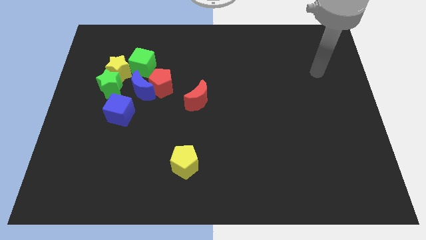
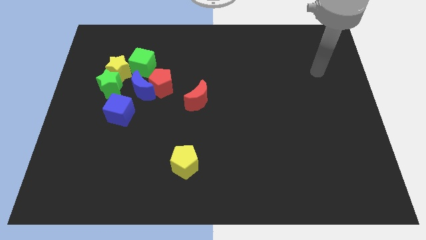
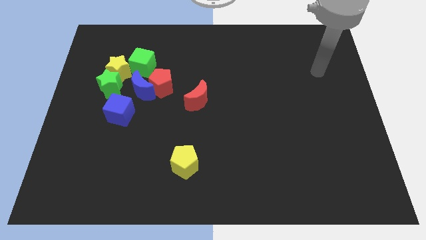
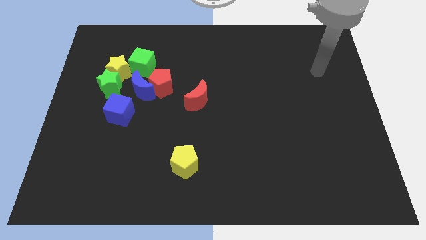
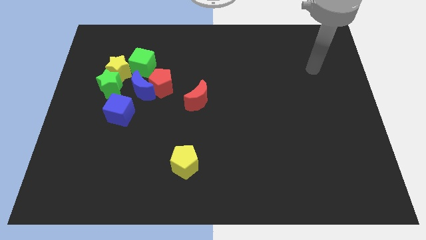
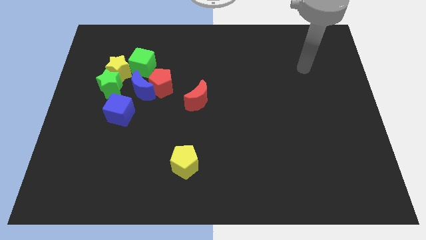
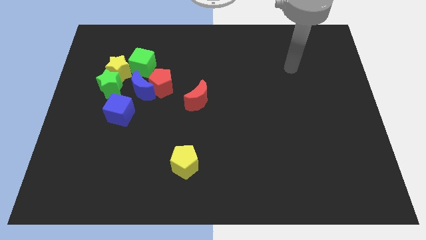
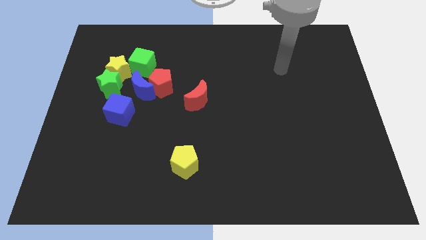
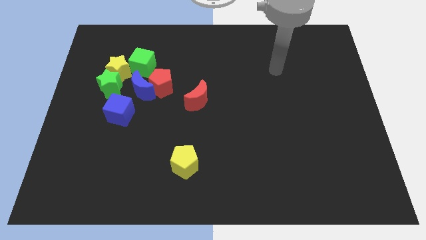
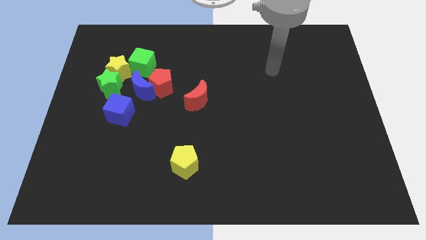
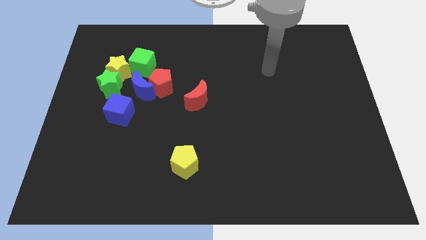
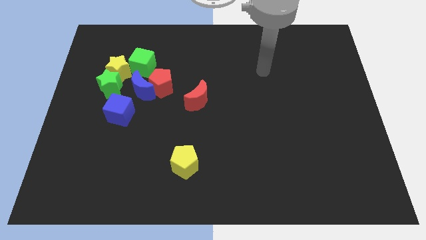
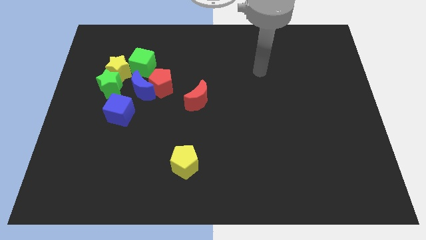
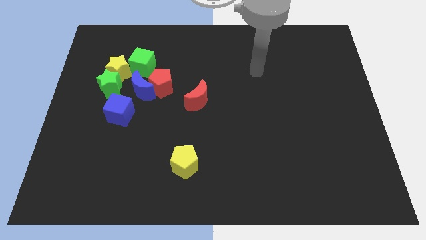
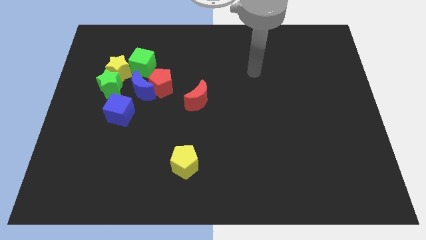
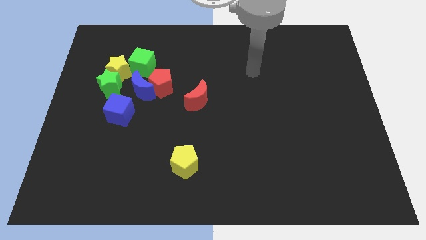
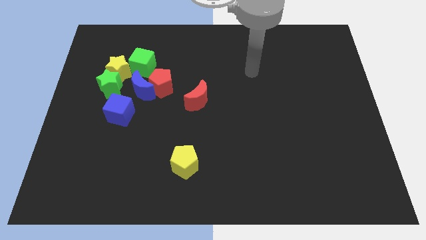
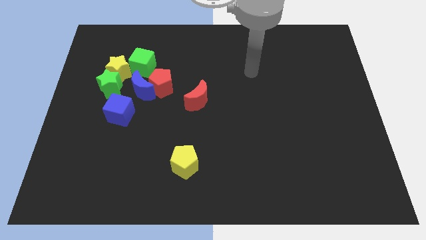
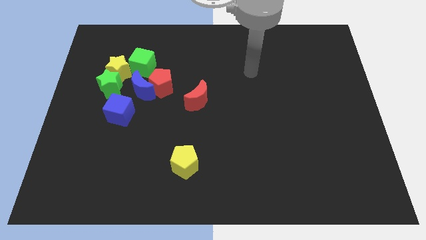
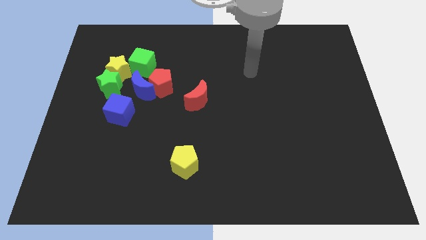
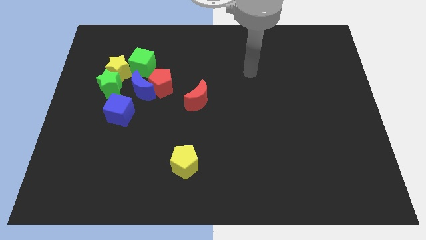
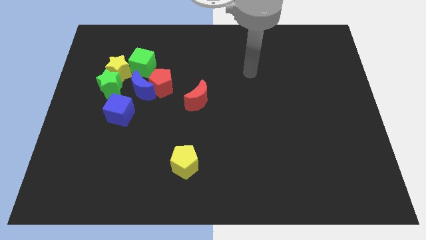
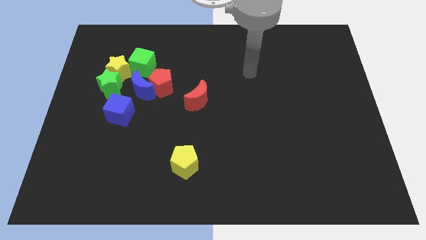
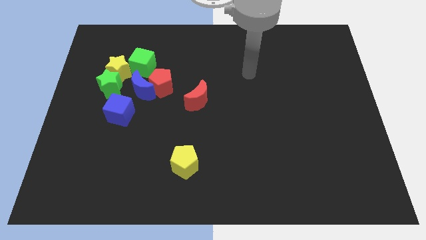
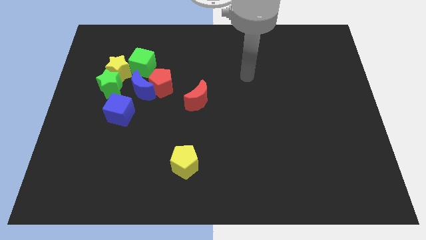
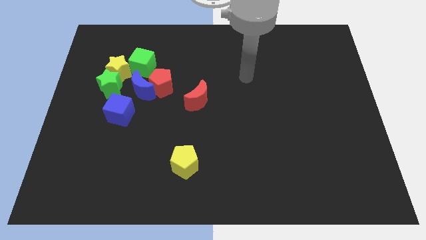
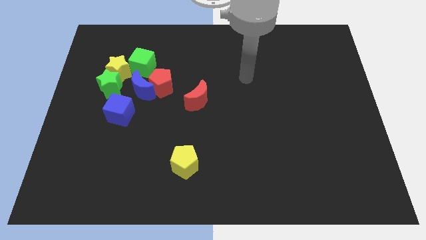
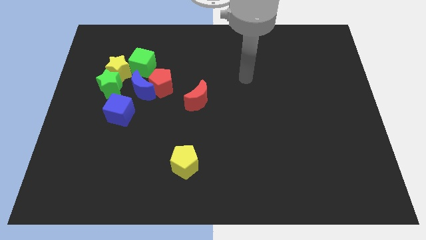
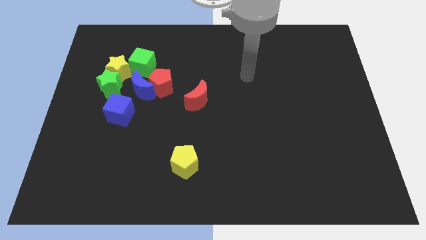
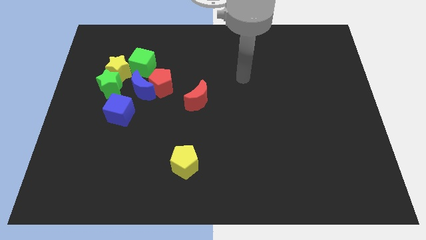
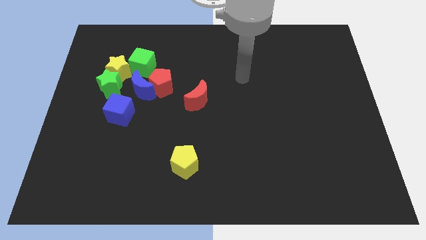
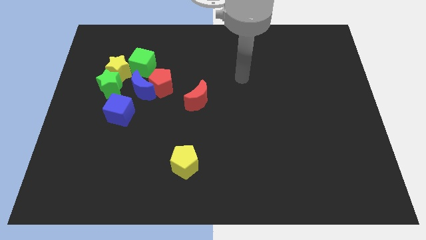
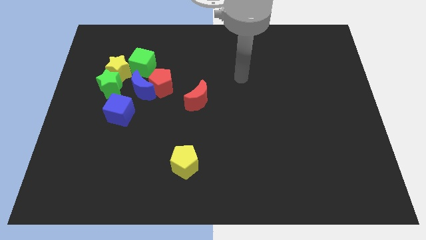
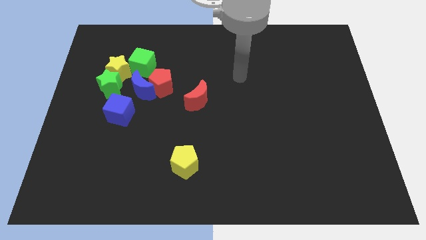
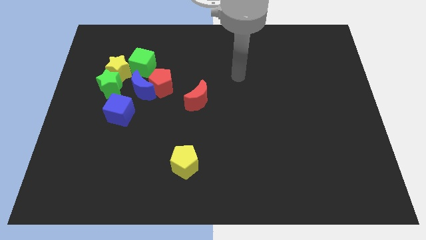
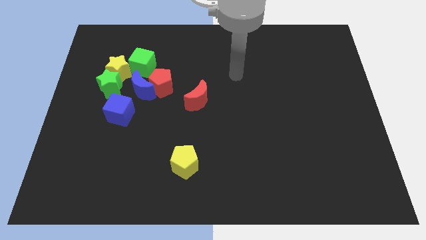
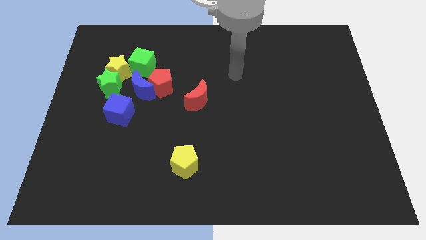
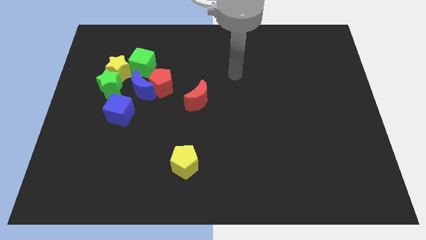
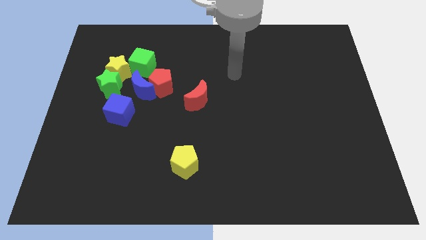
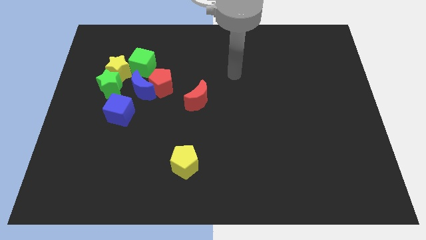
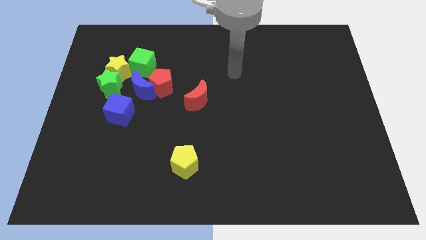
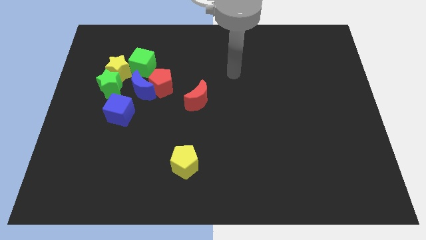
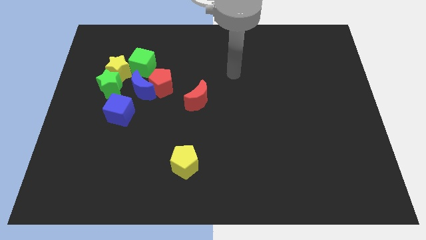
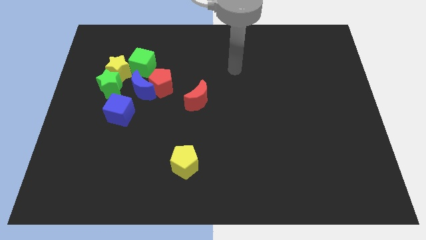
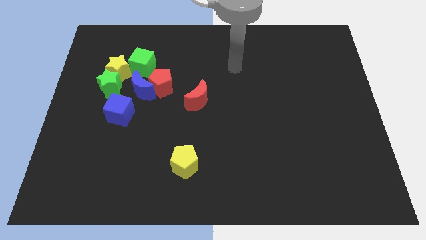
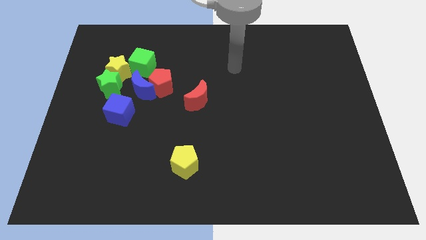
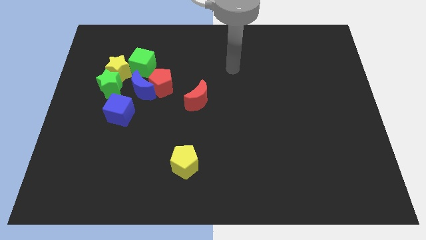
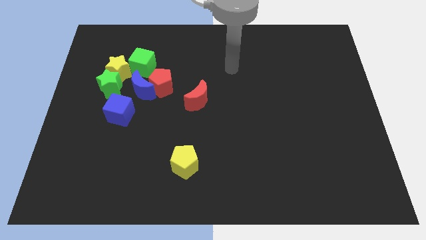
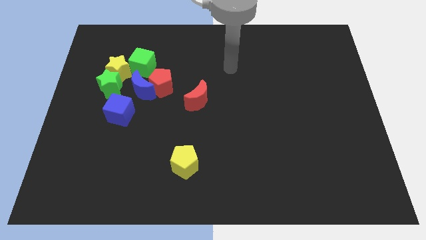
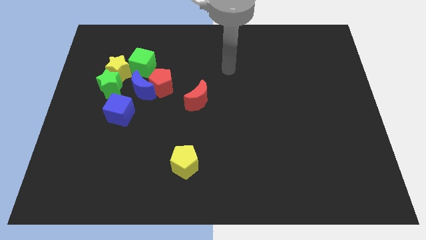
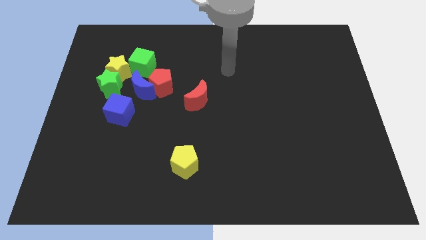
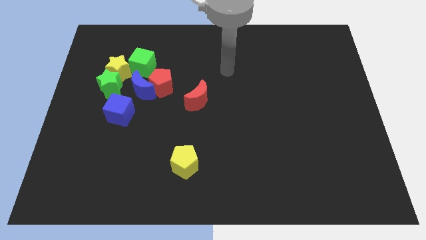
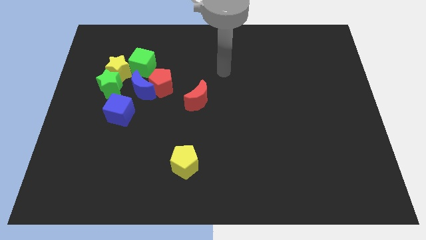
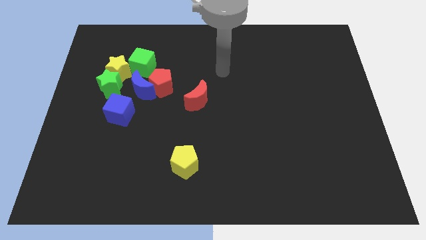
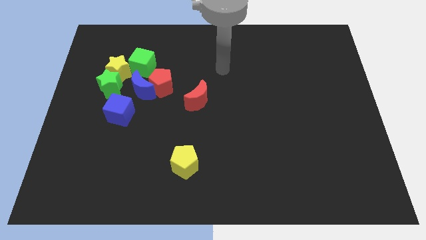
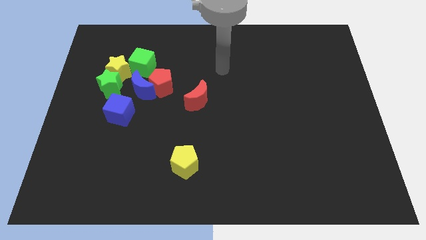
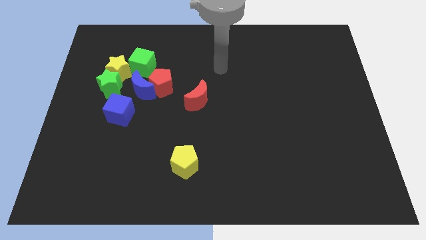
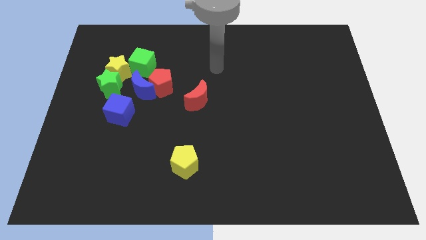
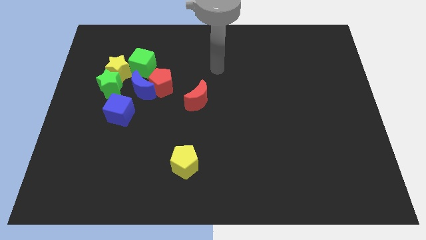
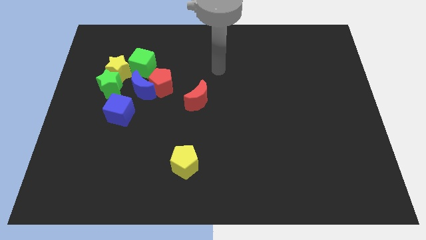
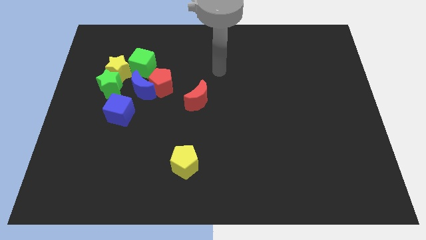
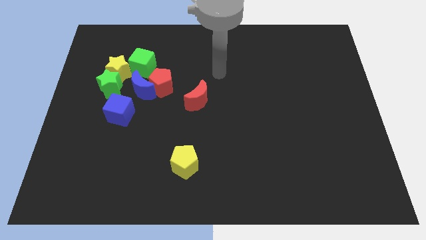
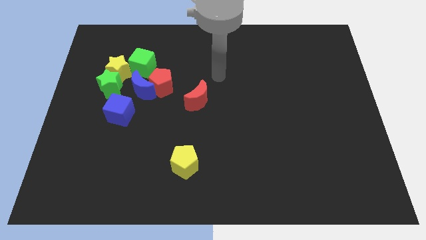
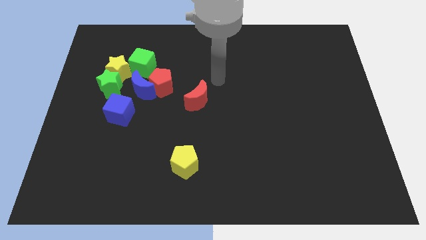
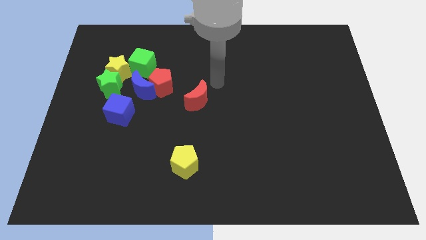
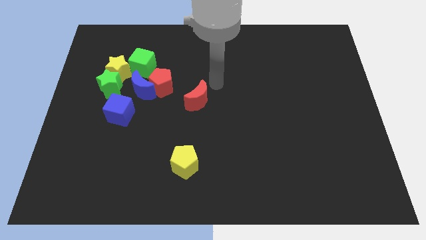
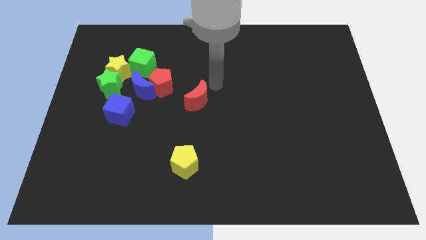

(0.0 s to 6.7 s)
move your arm at the top of the red moon

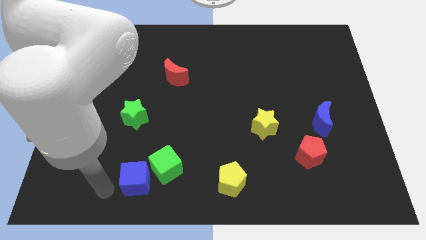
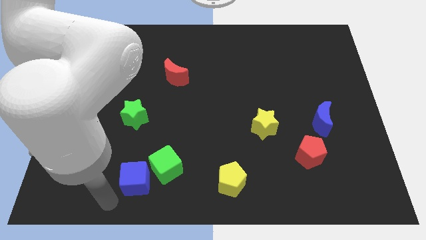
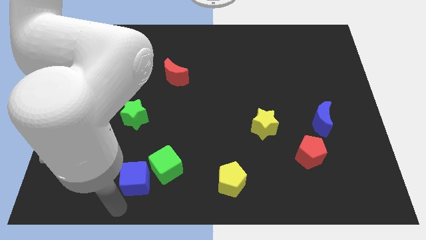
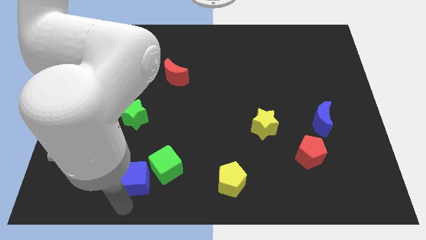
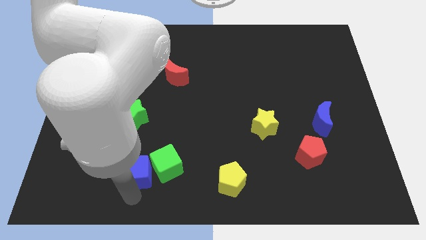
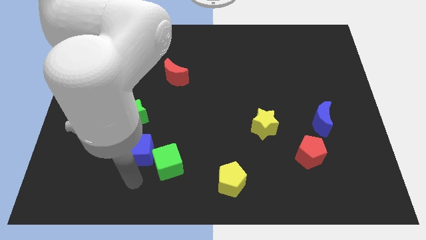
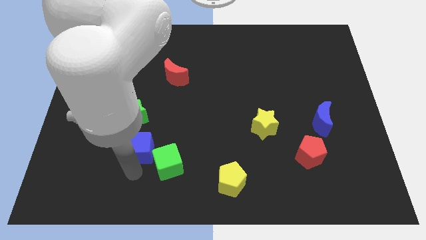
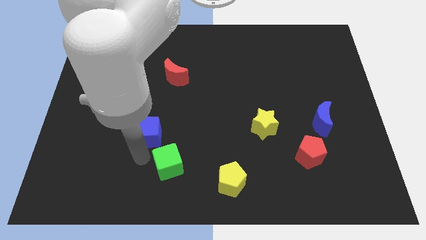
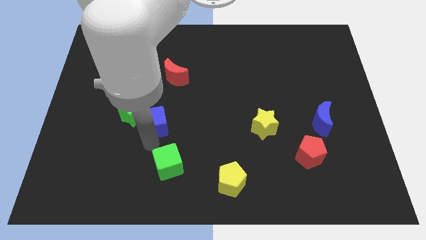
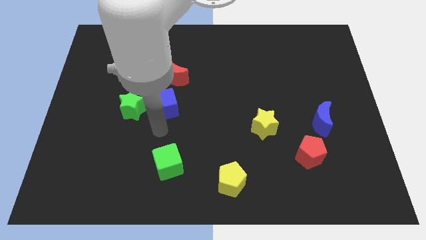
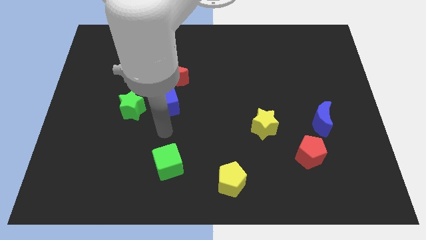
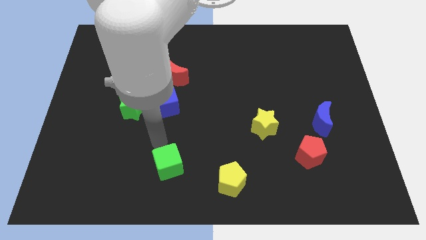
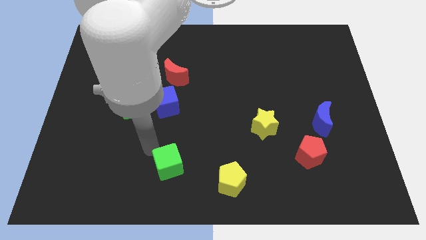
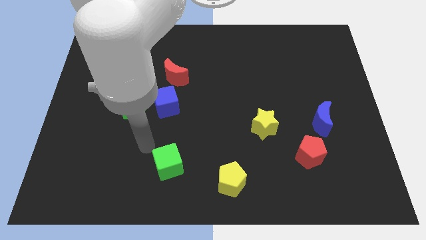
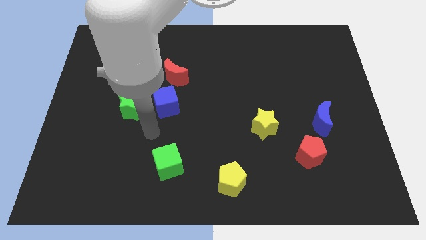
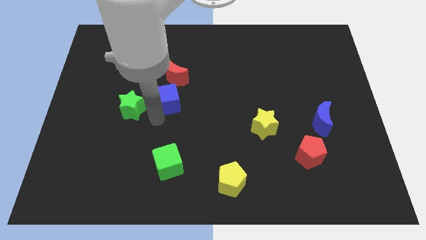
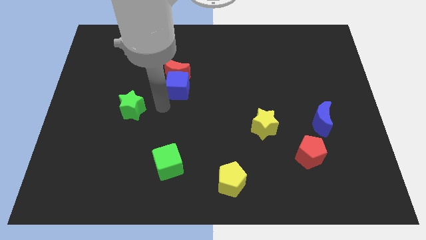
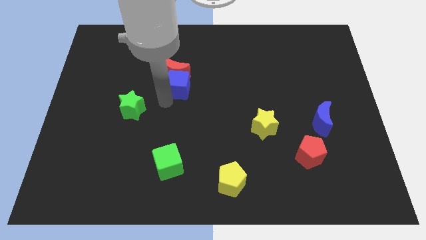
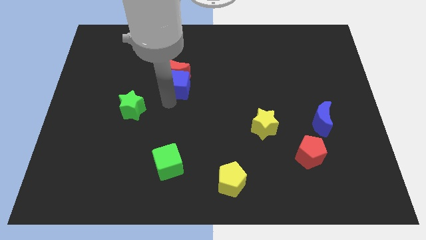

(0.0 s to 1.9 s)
move blue cube into red crescent

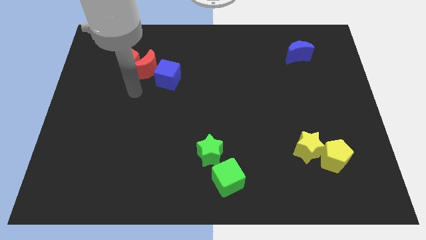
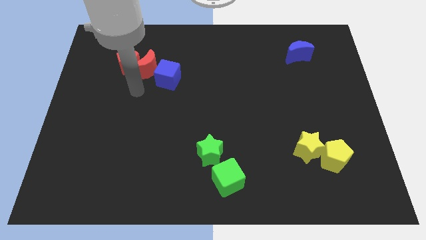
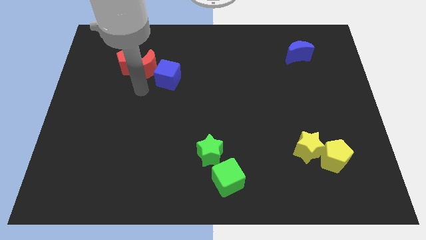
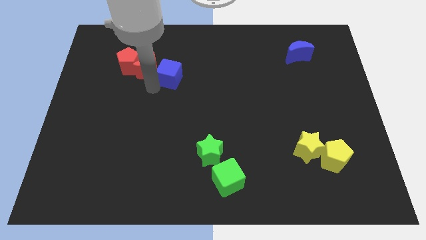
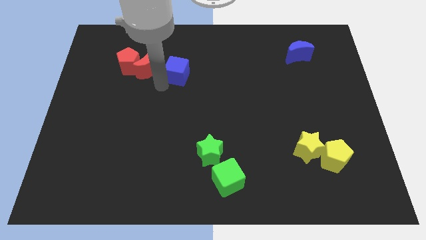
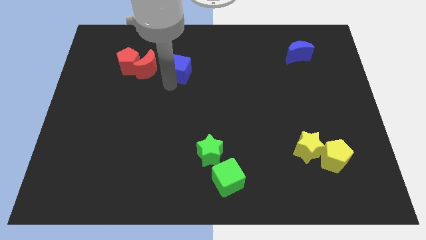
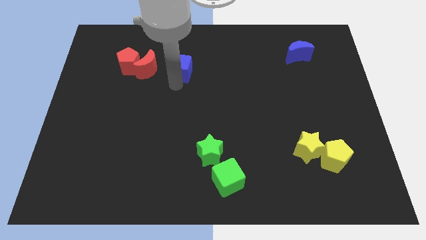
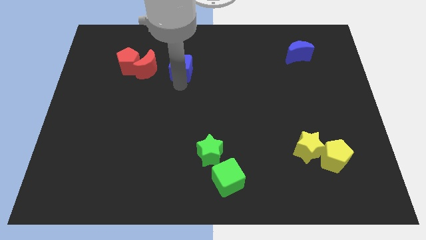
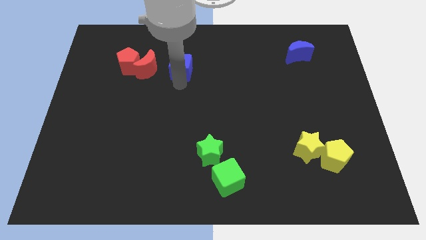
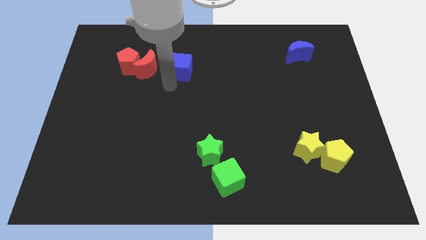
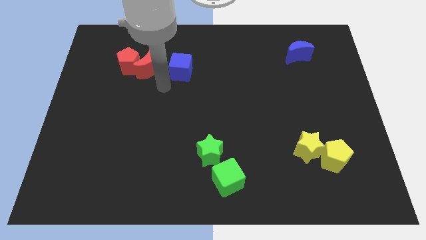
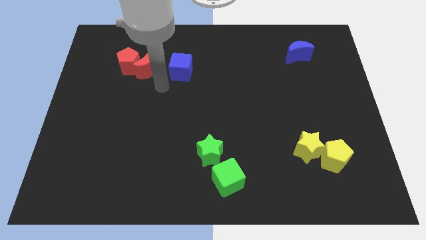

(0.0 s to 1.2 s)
move the blue cube to the right of the red crescent
